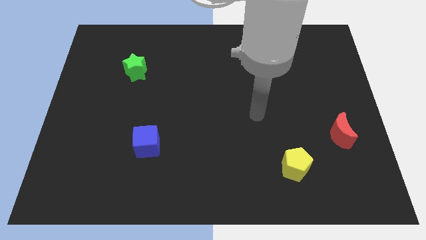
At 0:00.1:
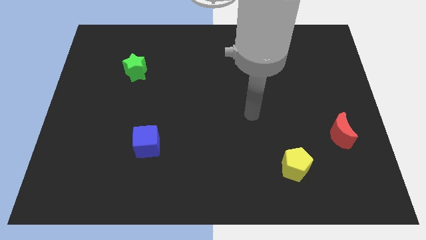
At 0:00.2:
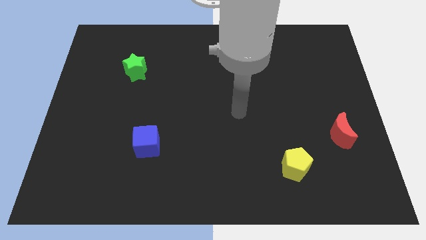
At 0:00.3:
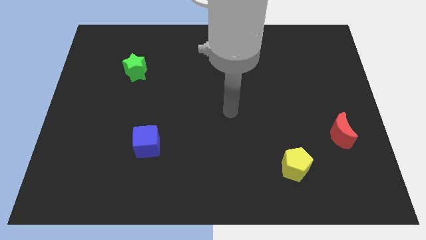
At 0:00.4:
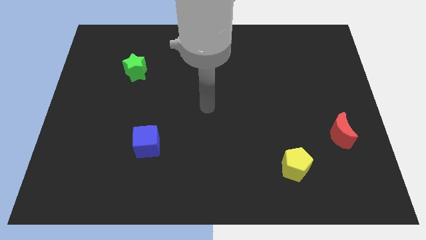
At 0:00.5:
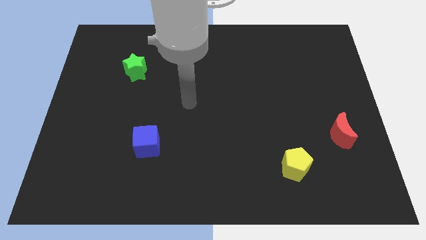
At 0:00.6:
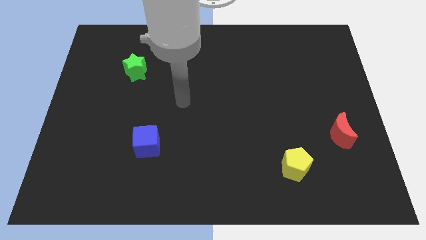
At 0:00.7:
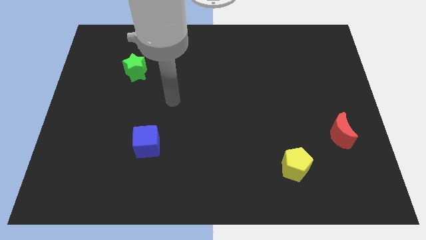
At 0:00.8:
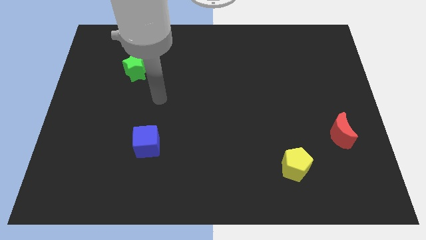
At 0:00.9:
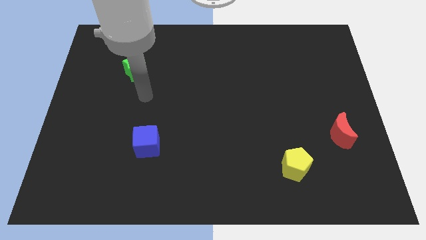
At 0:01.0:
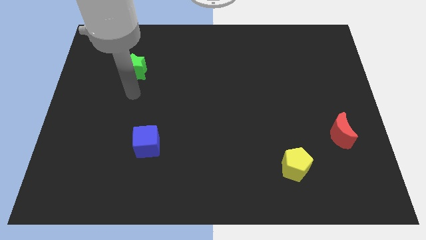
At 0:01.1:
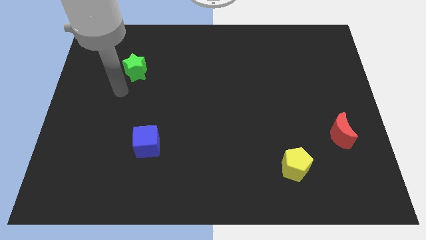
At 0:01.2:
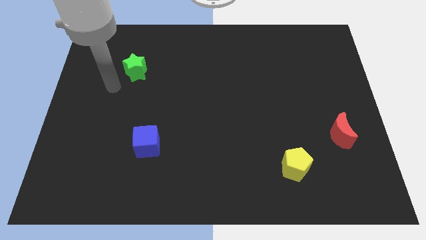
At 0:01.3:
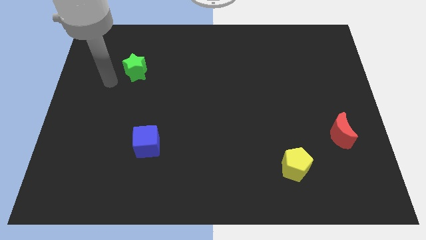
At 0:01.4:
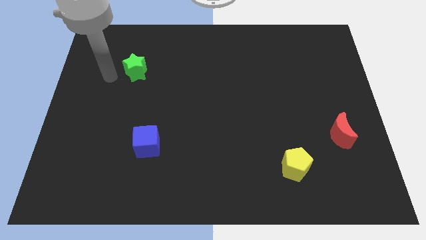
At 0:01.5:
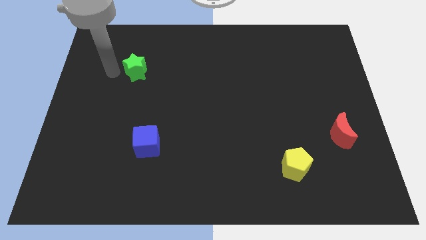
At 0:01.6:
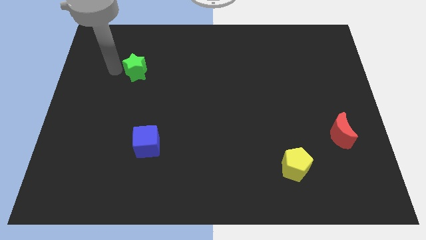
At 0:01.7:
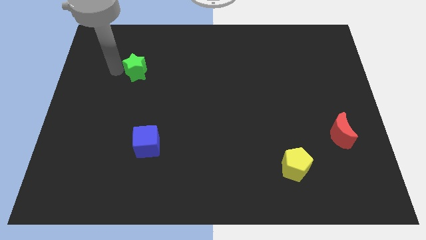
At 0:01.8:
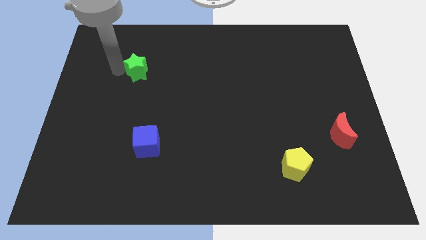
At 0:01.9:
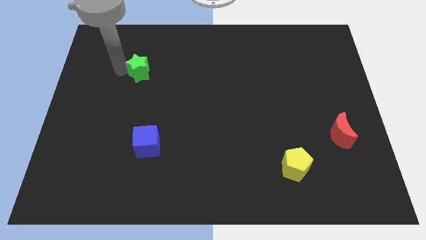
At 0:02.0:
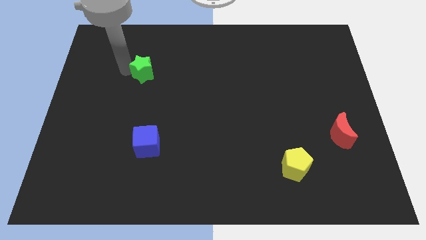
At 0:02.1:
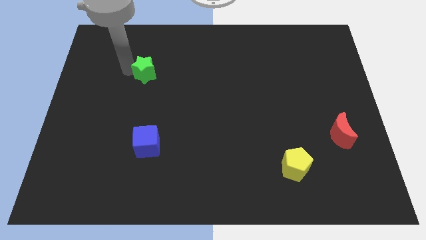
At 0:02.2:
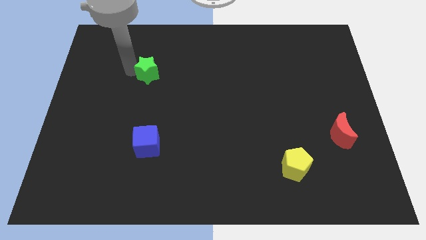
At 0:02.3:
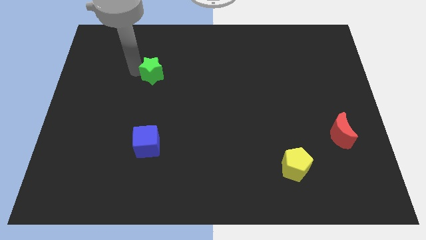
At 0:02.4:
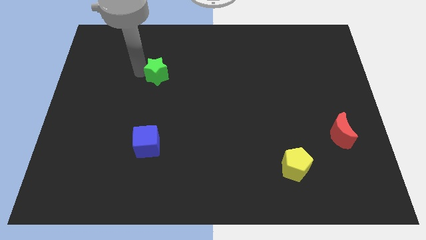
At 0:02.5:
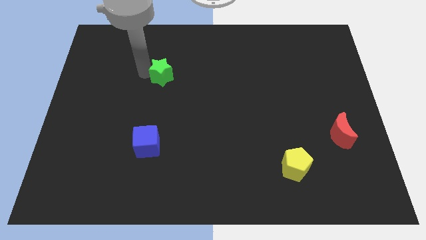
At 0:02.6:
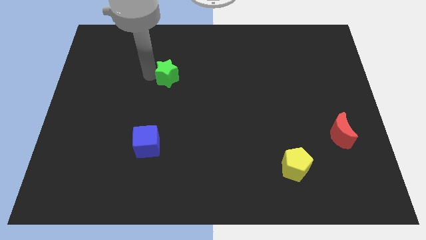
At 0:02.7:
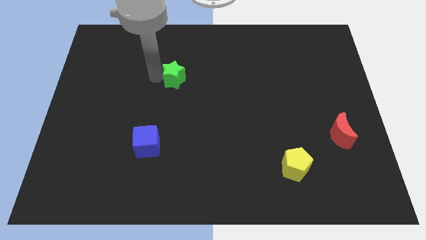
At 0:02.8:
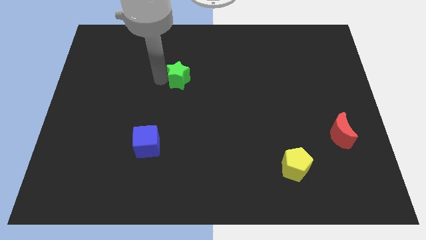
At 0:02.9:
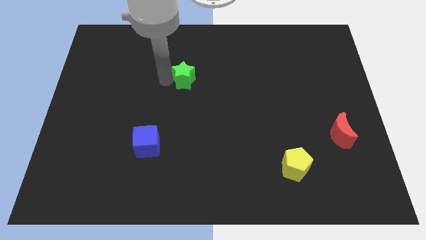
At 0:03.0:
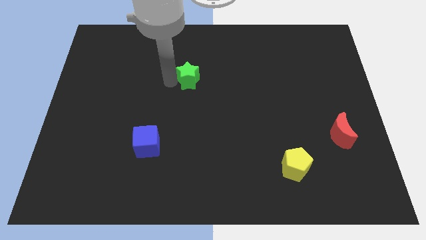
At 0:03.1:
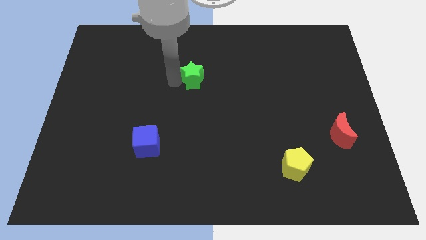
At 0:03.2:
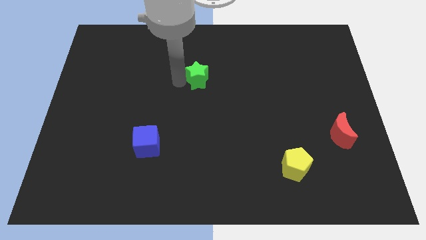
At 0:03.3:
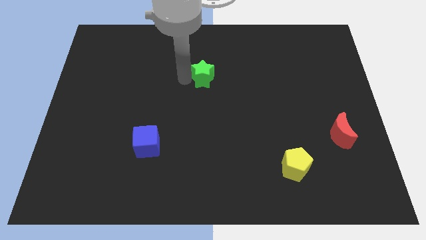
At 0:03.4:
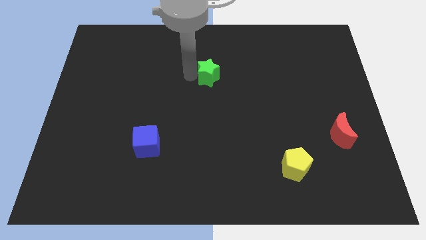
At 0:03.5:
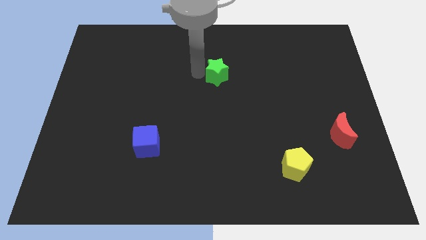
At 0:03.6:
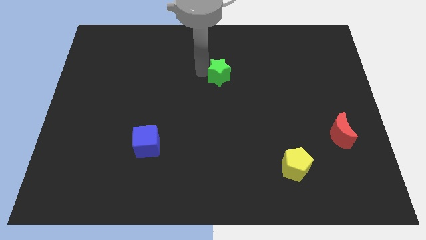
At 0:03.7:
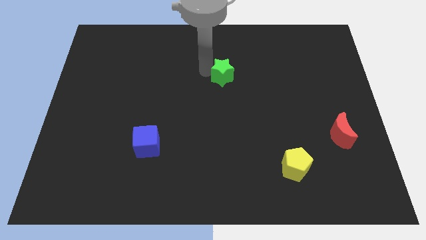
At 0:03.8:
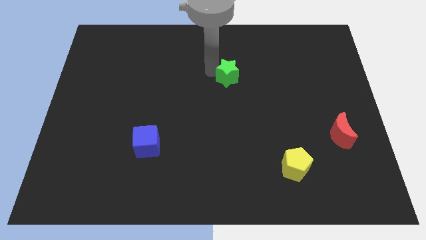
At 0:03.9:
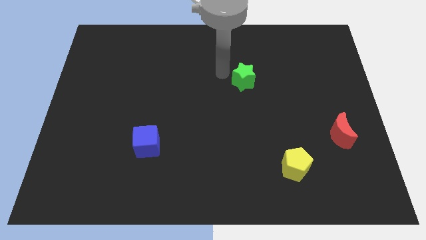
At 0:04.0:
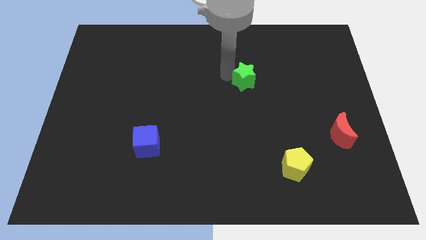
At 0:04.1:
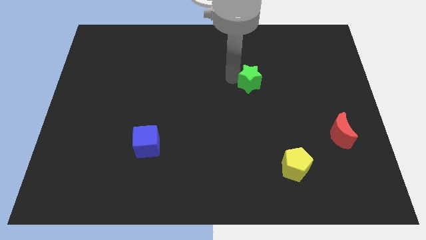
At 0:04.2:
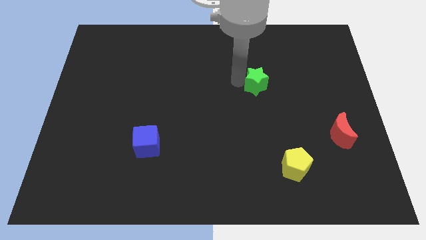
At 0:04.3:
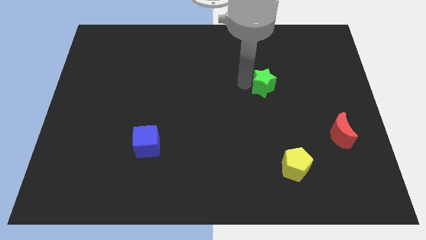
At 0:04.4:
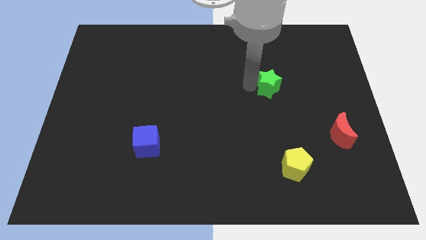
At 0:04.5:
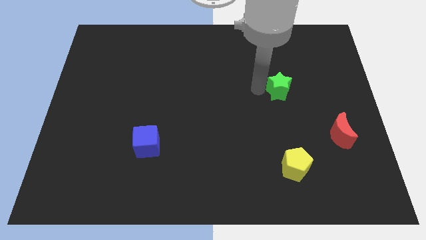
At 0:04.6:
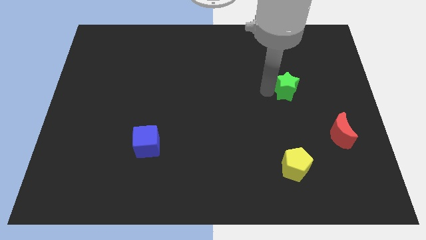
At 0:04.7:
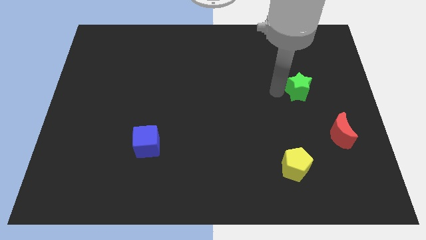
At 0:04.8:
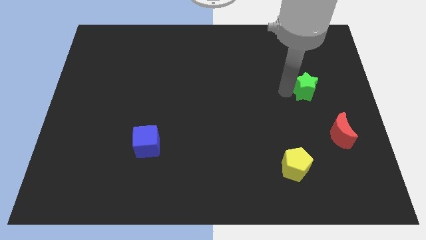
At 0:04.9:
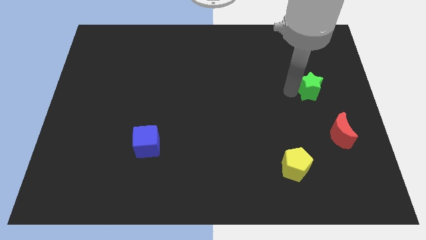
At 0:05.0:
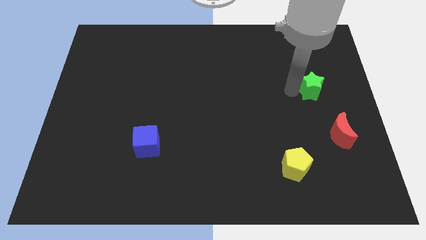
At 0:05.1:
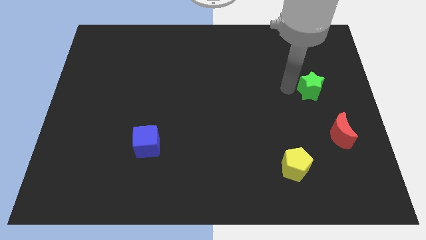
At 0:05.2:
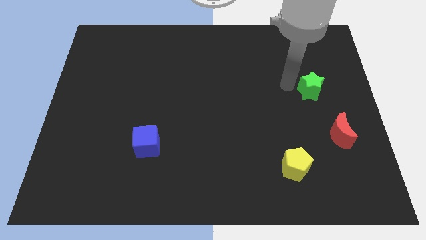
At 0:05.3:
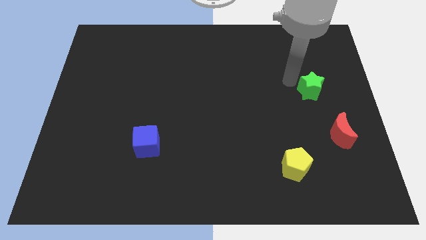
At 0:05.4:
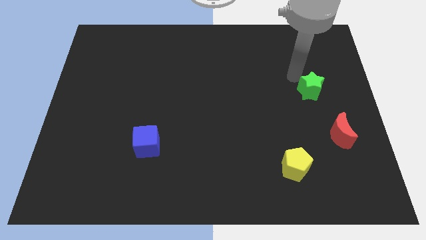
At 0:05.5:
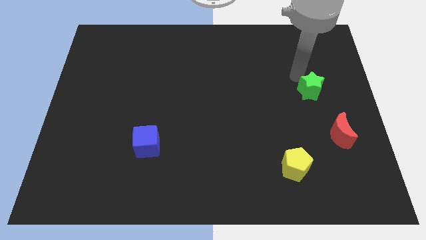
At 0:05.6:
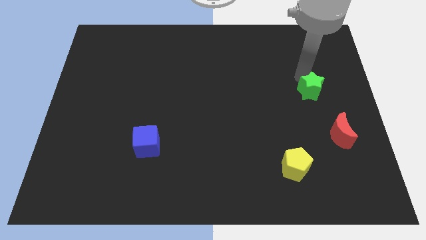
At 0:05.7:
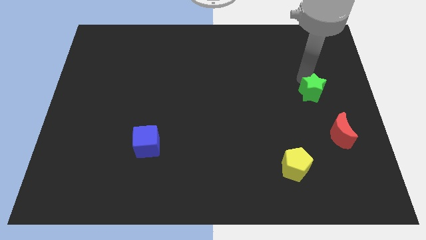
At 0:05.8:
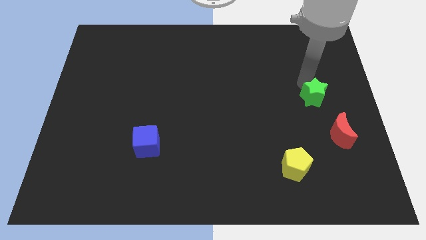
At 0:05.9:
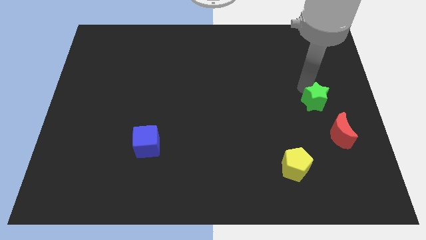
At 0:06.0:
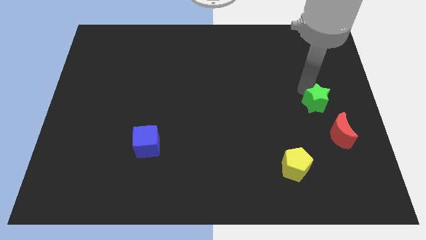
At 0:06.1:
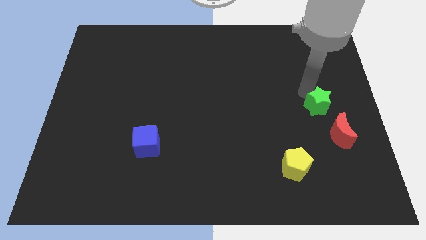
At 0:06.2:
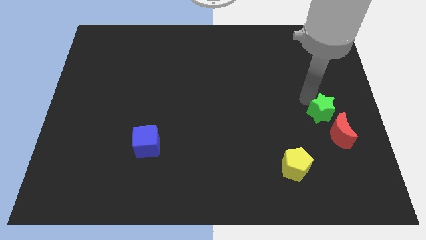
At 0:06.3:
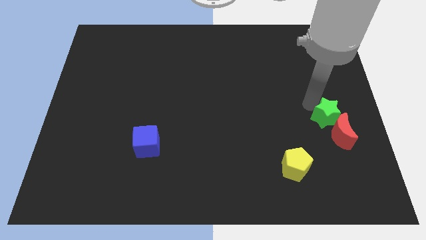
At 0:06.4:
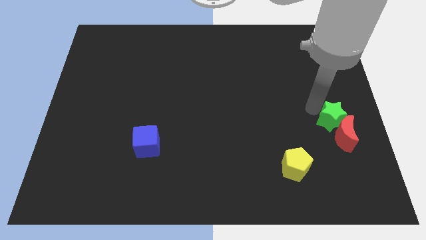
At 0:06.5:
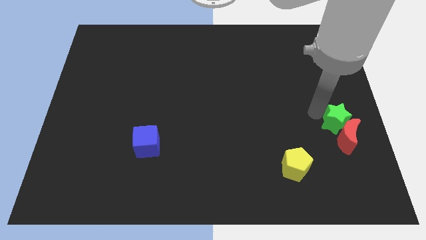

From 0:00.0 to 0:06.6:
push the green block to the red block

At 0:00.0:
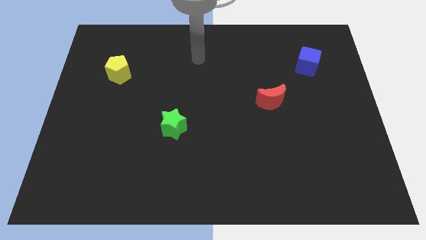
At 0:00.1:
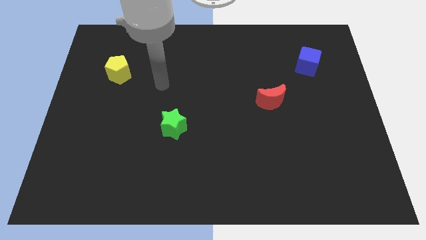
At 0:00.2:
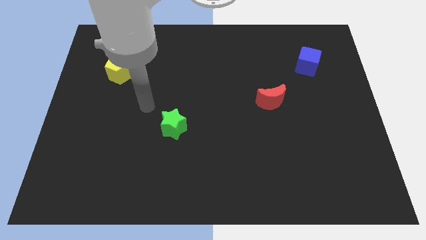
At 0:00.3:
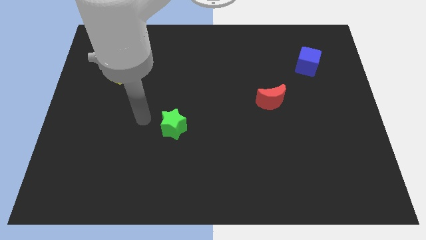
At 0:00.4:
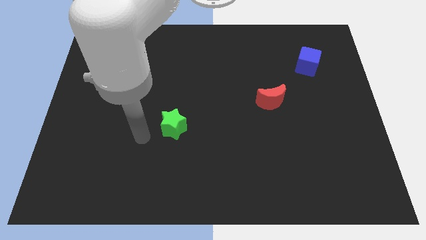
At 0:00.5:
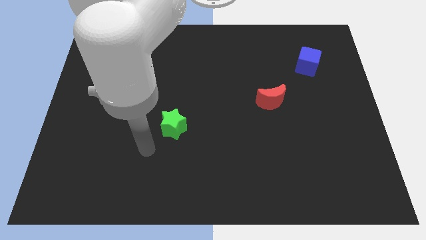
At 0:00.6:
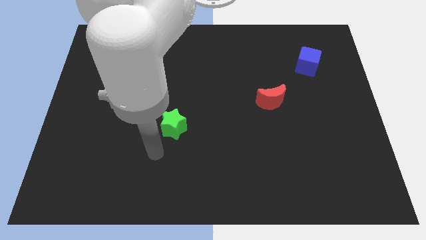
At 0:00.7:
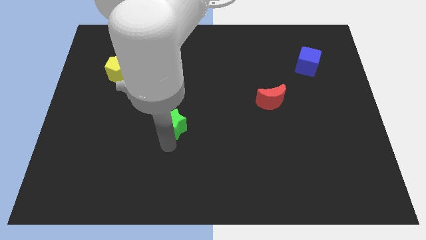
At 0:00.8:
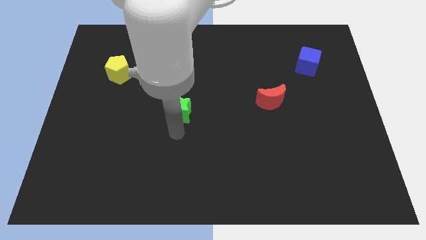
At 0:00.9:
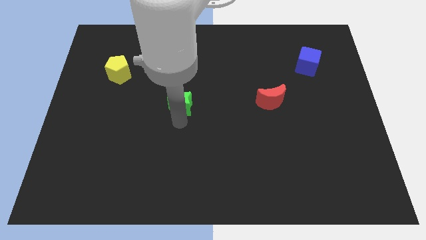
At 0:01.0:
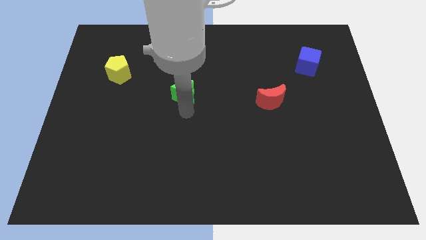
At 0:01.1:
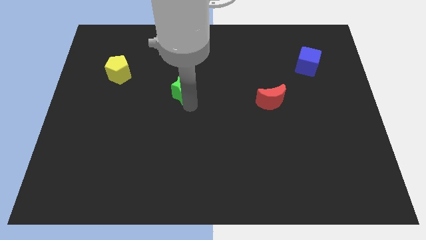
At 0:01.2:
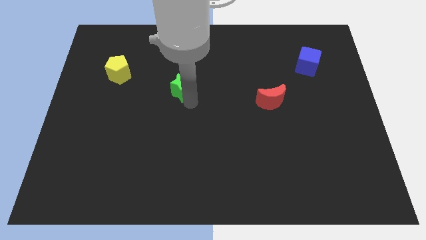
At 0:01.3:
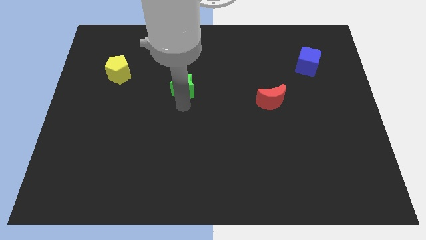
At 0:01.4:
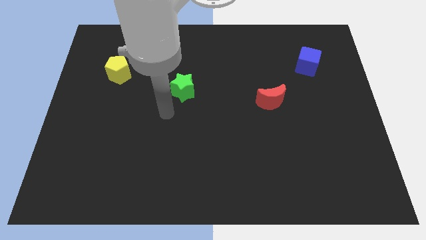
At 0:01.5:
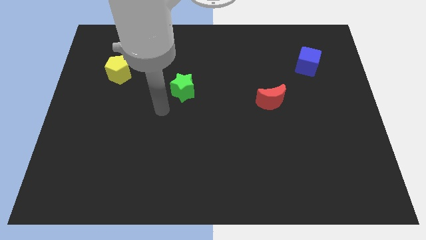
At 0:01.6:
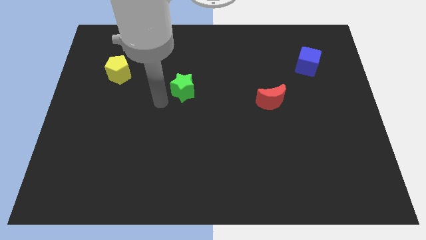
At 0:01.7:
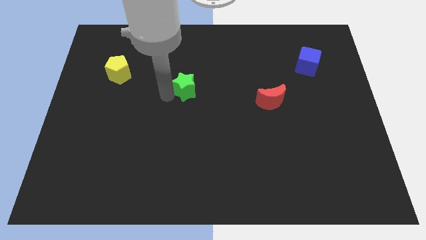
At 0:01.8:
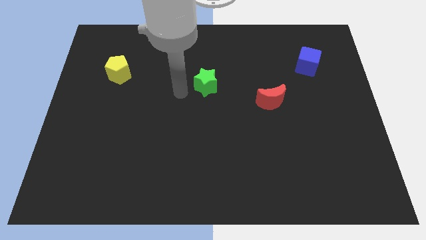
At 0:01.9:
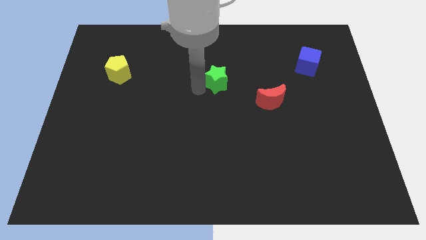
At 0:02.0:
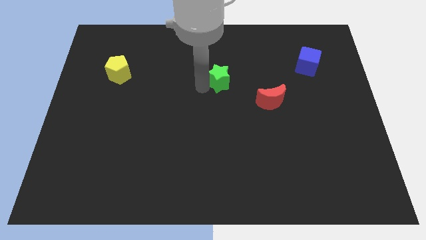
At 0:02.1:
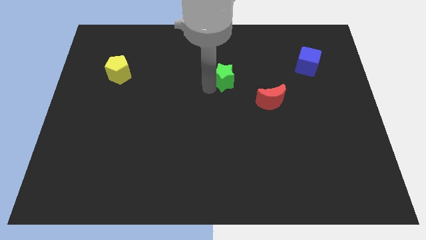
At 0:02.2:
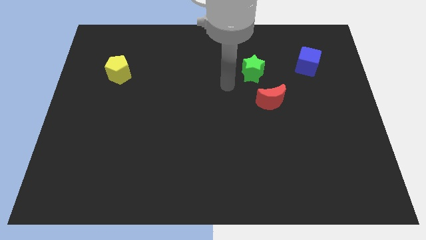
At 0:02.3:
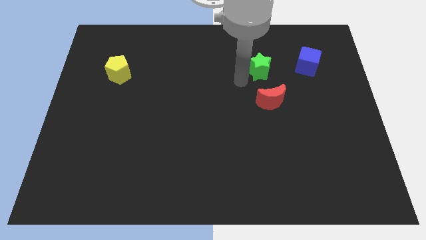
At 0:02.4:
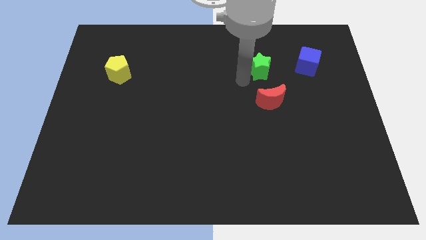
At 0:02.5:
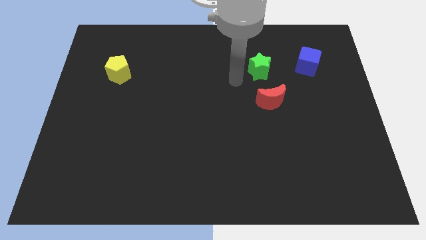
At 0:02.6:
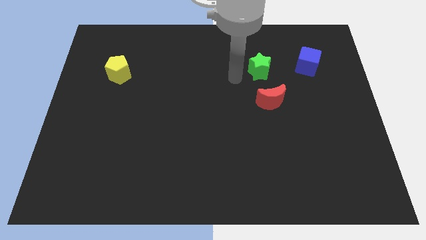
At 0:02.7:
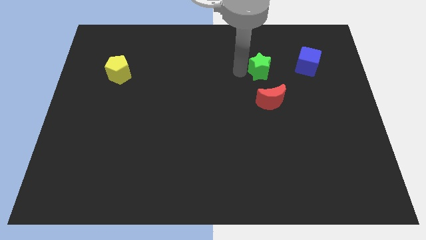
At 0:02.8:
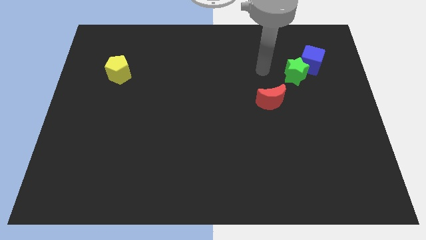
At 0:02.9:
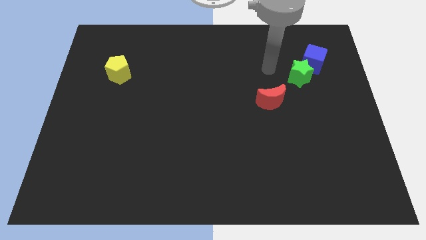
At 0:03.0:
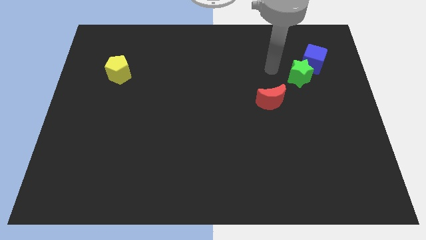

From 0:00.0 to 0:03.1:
push the green star to the blue cube
